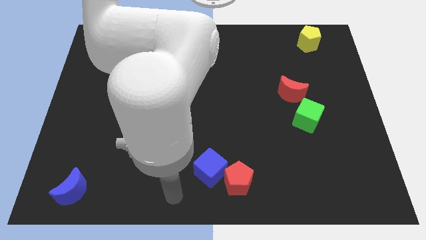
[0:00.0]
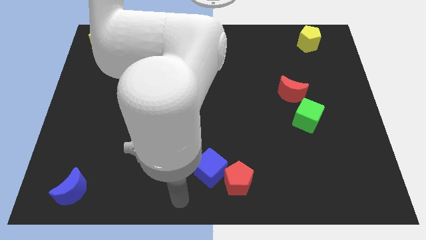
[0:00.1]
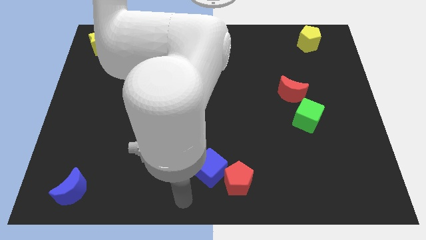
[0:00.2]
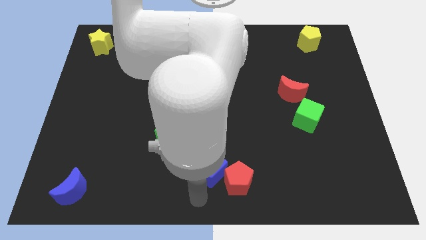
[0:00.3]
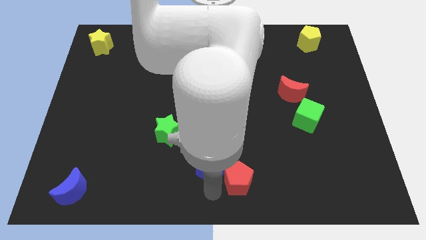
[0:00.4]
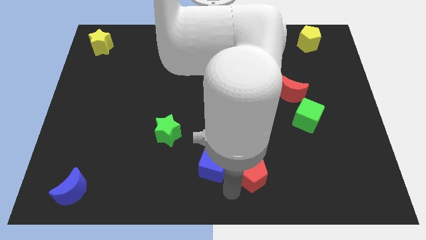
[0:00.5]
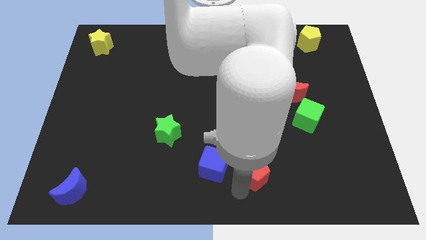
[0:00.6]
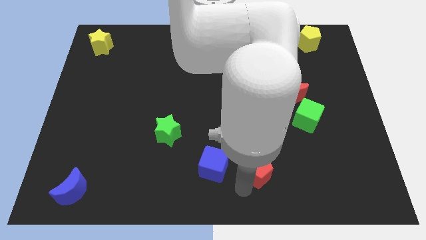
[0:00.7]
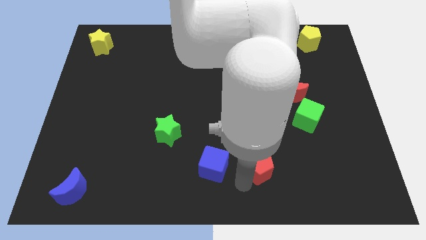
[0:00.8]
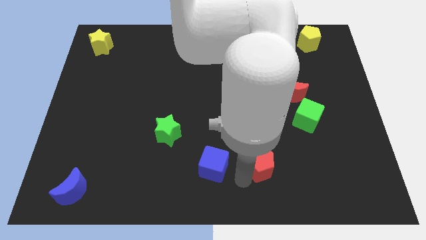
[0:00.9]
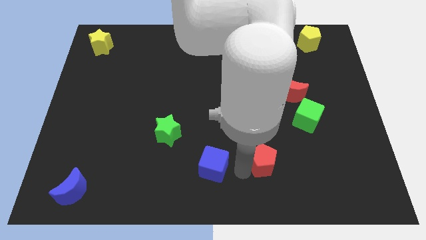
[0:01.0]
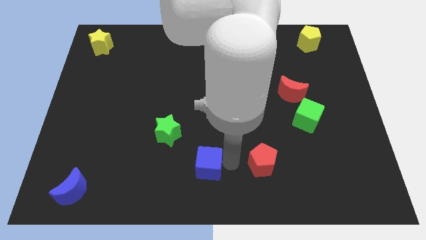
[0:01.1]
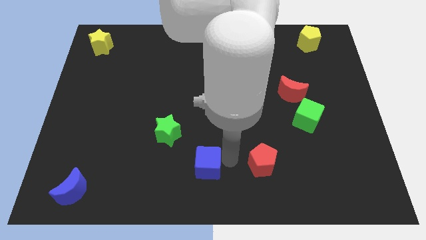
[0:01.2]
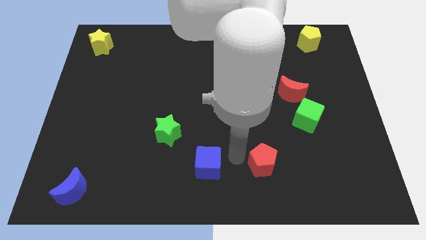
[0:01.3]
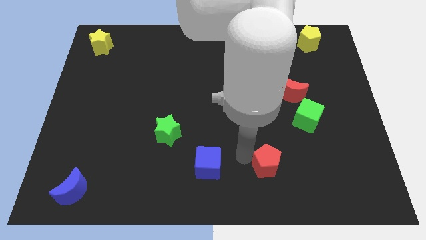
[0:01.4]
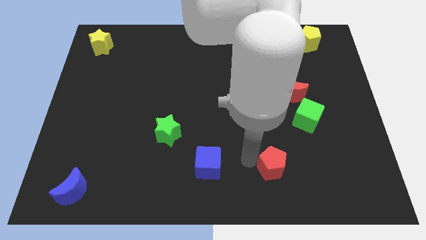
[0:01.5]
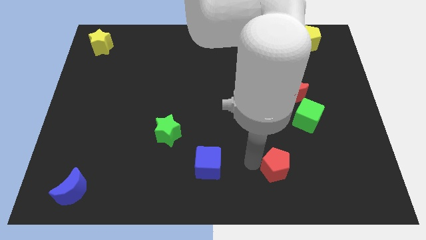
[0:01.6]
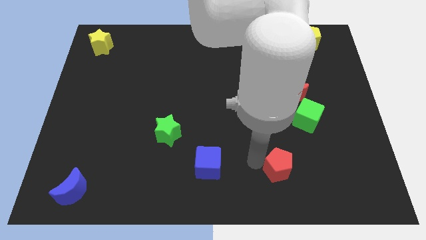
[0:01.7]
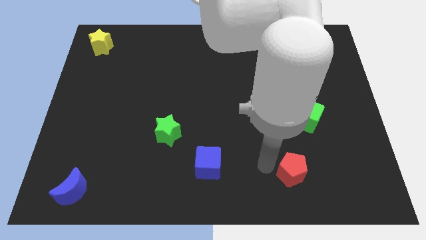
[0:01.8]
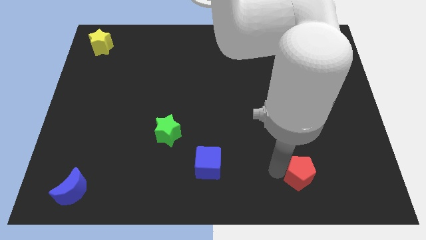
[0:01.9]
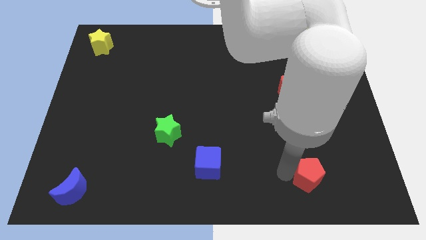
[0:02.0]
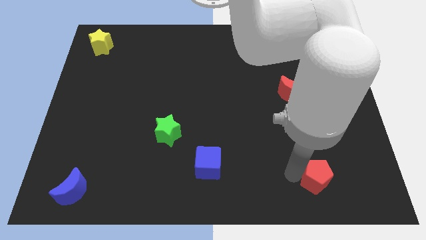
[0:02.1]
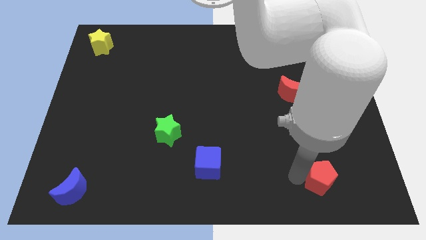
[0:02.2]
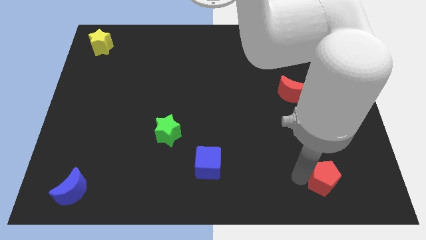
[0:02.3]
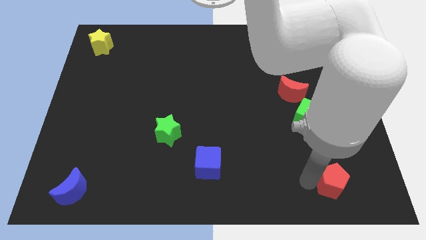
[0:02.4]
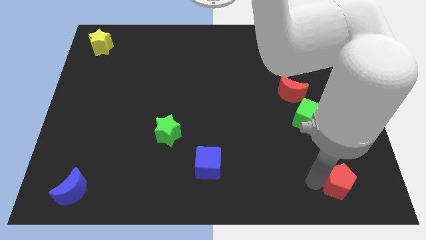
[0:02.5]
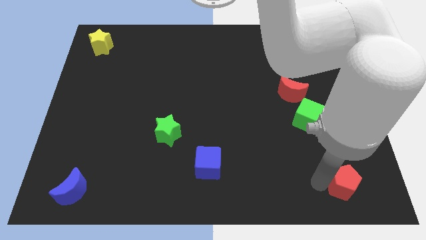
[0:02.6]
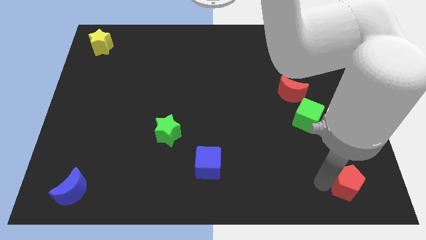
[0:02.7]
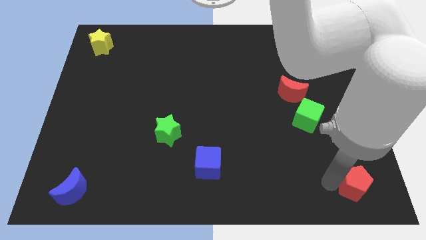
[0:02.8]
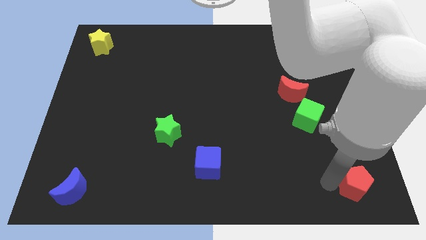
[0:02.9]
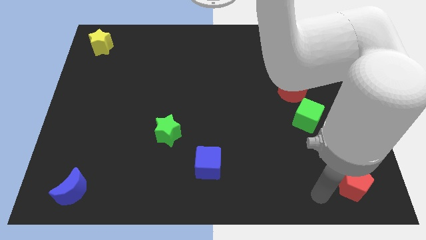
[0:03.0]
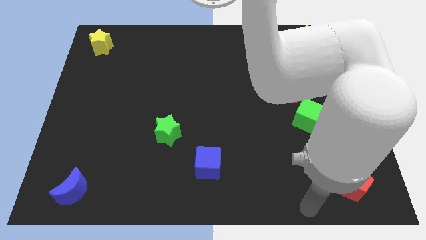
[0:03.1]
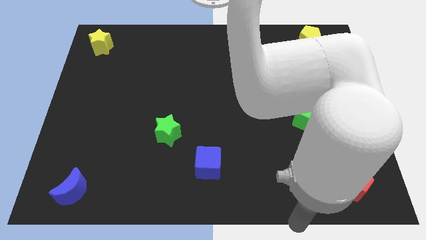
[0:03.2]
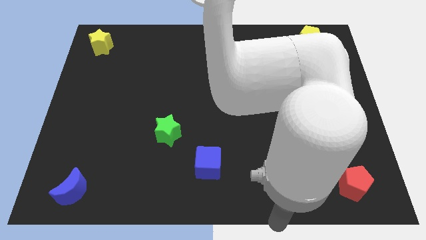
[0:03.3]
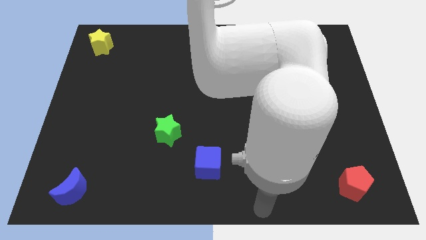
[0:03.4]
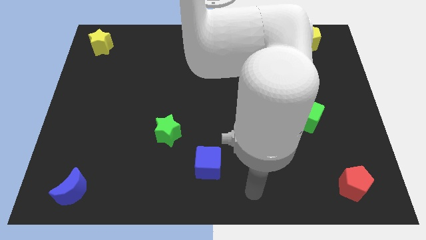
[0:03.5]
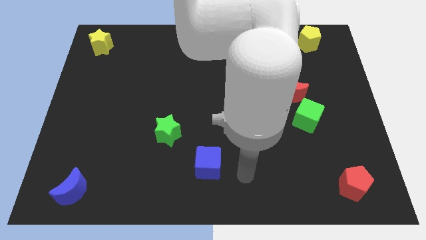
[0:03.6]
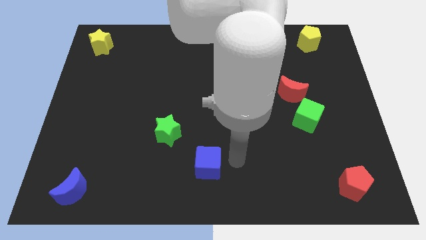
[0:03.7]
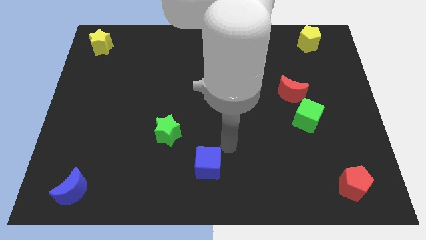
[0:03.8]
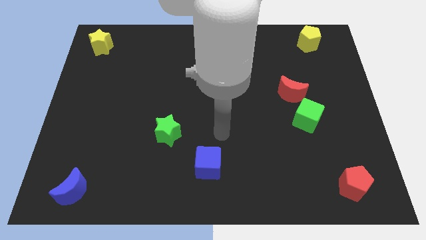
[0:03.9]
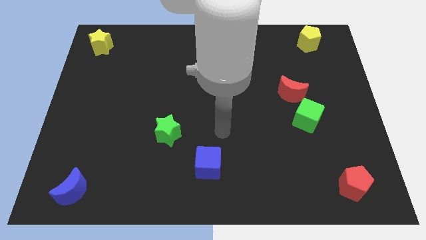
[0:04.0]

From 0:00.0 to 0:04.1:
push the red pentagon away from the blue cube

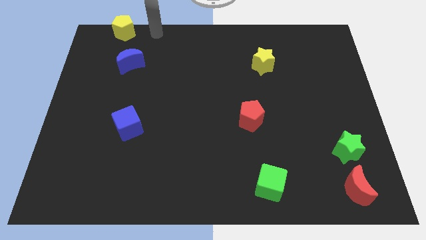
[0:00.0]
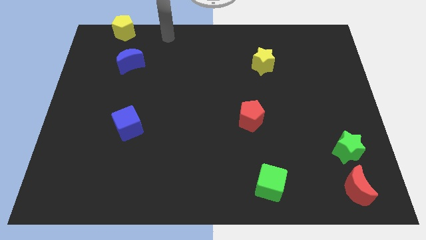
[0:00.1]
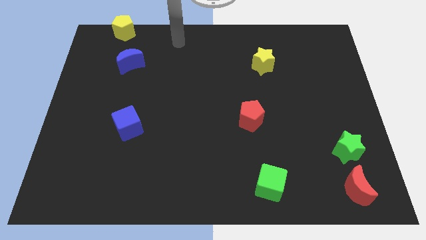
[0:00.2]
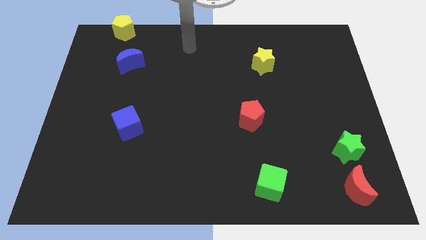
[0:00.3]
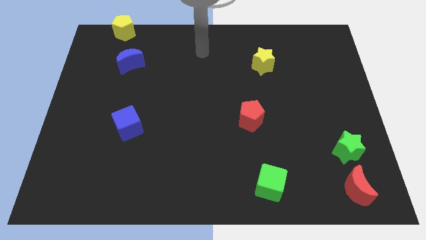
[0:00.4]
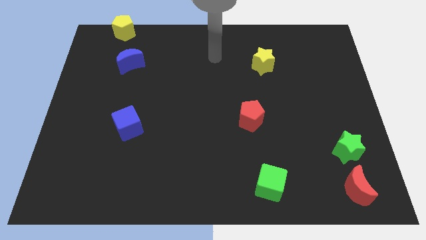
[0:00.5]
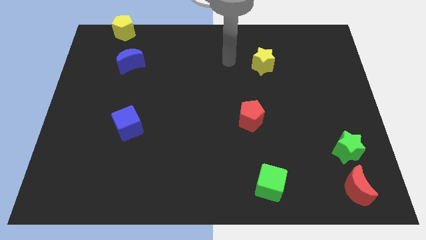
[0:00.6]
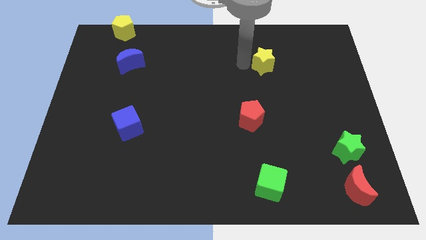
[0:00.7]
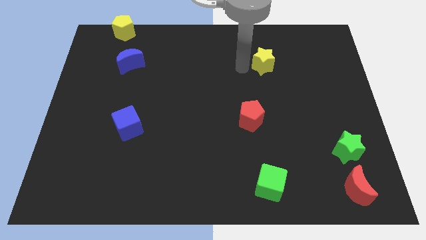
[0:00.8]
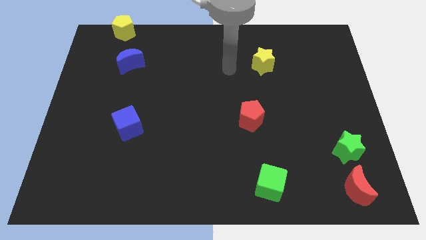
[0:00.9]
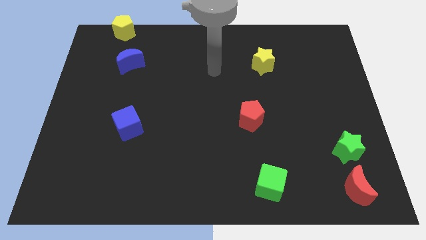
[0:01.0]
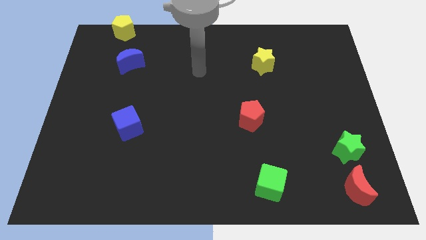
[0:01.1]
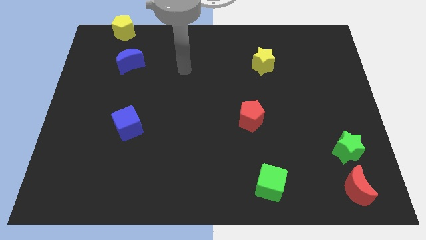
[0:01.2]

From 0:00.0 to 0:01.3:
place arm in between yellow star and blue crescent

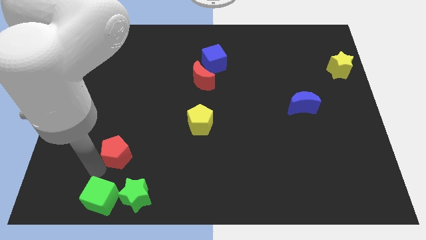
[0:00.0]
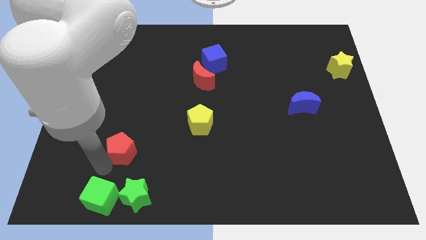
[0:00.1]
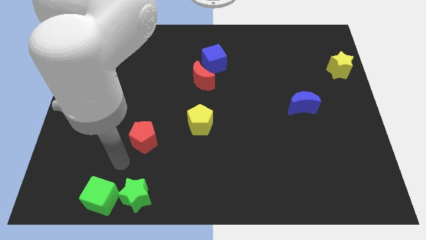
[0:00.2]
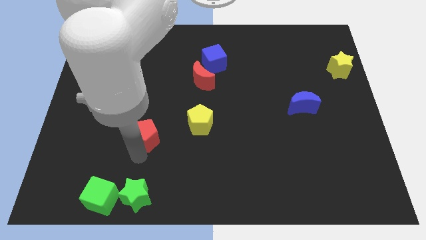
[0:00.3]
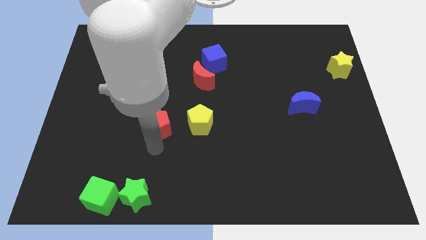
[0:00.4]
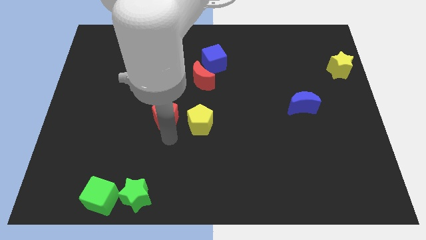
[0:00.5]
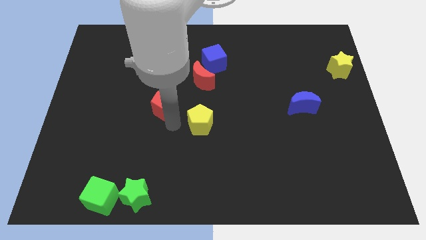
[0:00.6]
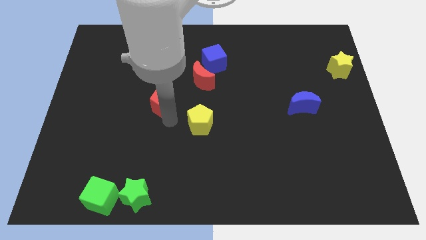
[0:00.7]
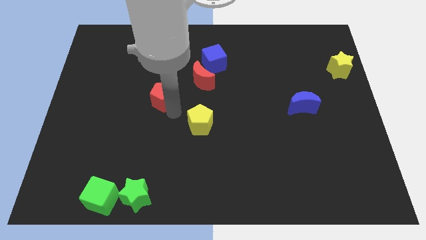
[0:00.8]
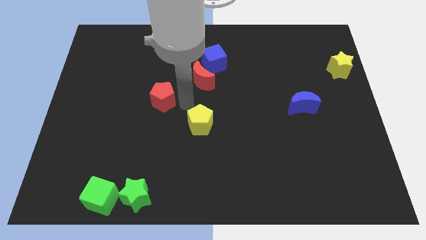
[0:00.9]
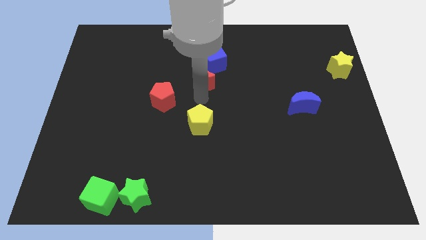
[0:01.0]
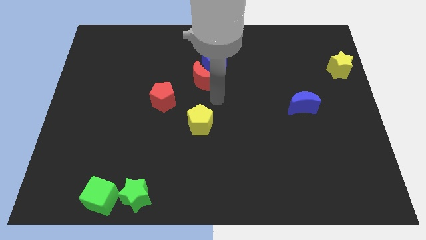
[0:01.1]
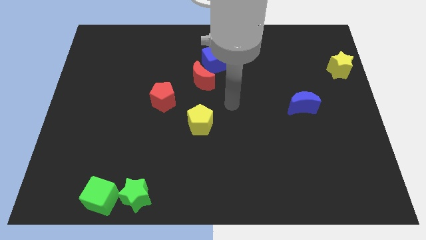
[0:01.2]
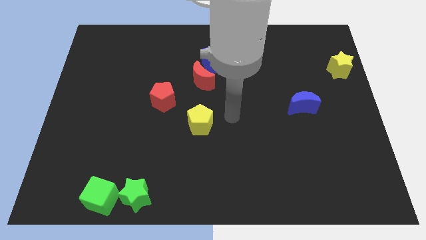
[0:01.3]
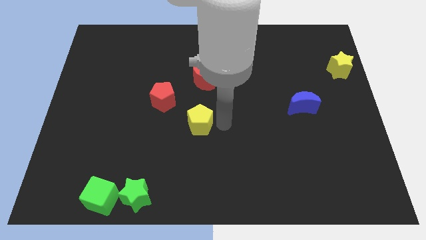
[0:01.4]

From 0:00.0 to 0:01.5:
push the red pentagon diagonal to the yellow pentagon

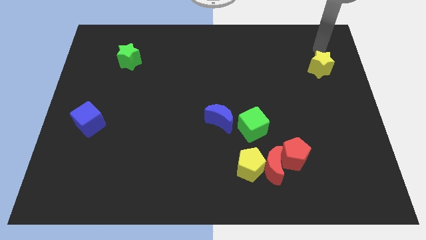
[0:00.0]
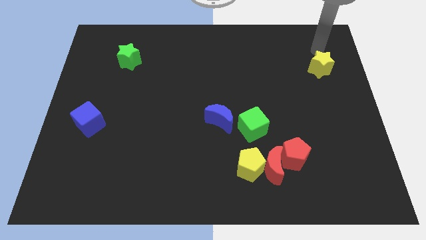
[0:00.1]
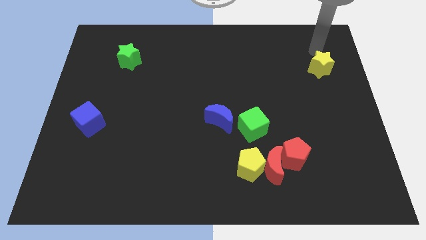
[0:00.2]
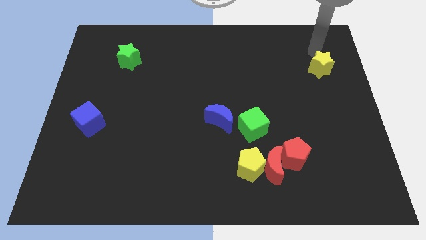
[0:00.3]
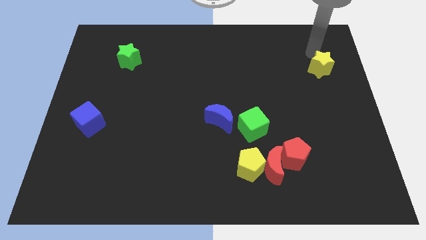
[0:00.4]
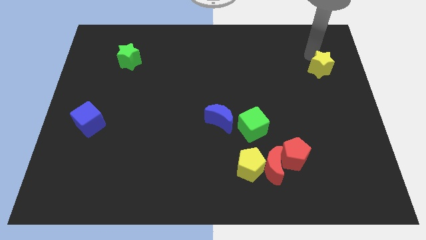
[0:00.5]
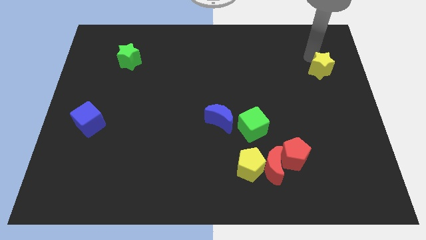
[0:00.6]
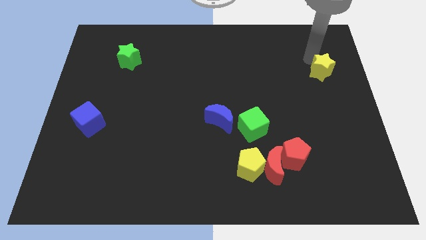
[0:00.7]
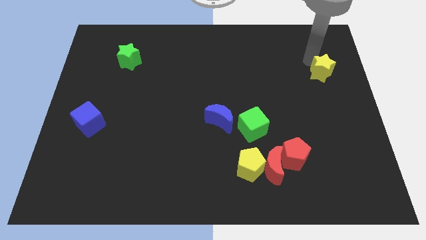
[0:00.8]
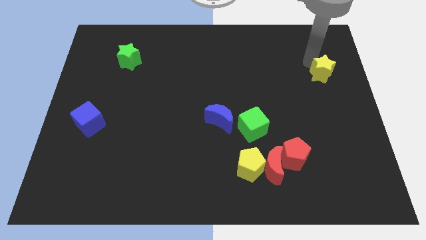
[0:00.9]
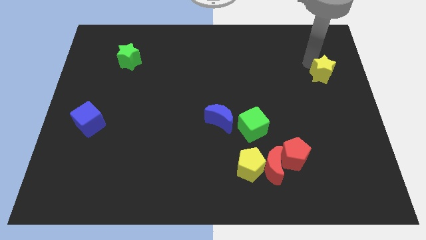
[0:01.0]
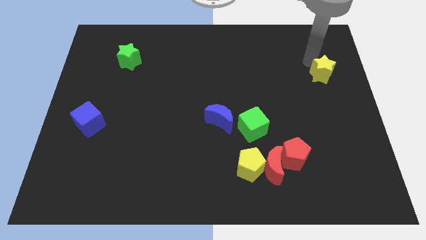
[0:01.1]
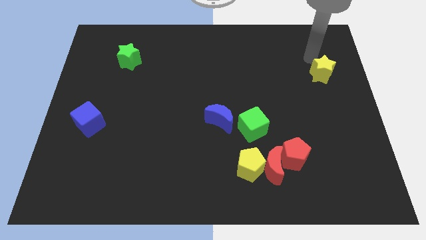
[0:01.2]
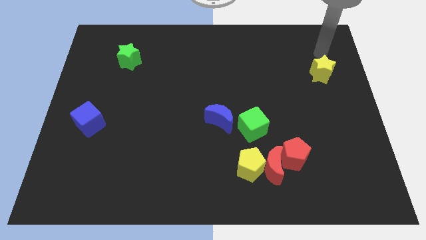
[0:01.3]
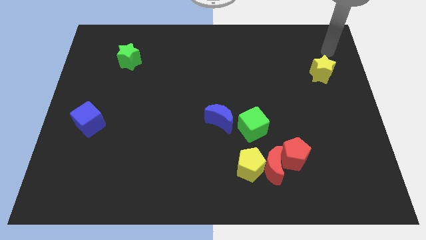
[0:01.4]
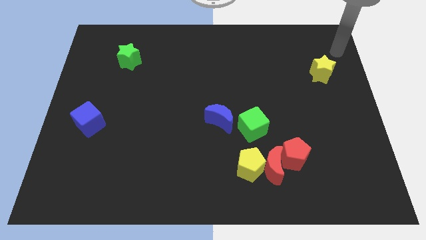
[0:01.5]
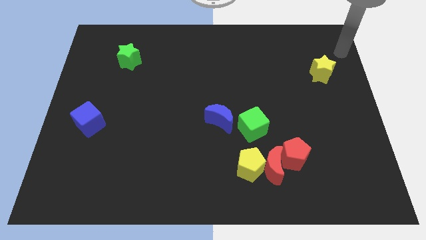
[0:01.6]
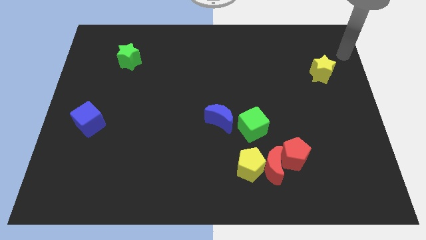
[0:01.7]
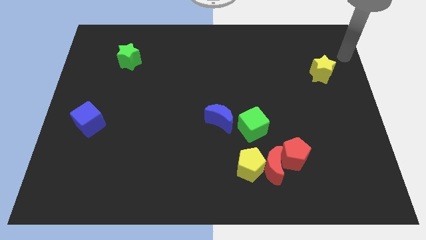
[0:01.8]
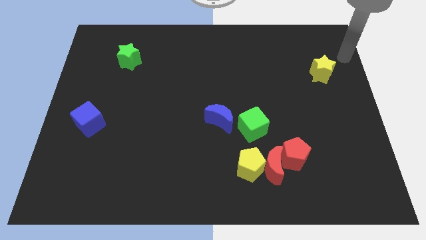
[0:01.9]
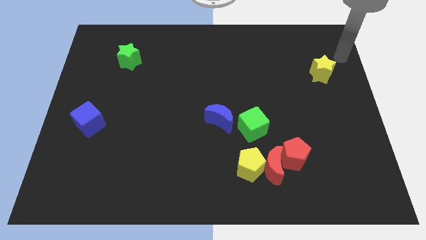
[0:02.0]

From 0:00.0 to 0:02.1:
slightly move the yellow star to the bottom

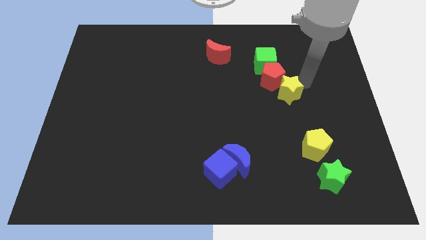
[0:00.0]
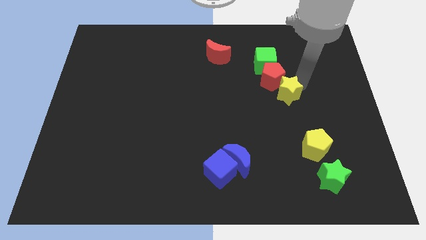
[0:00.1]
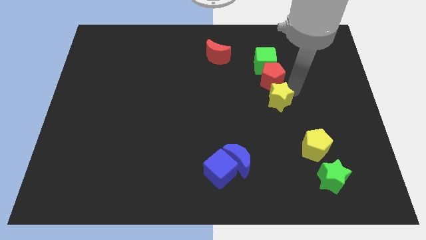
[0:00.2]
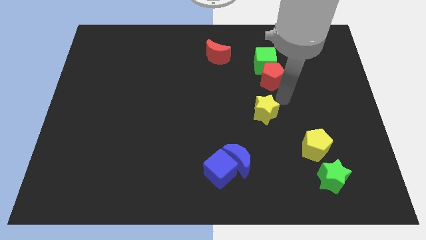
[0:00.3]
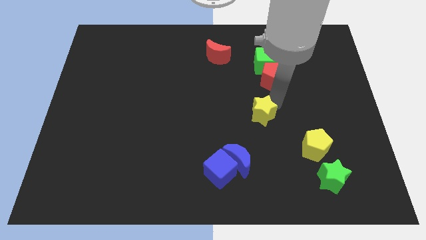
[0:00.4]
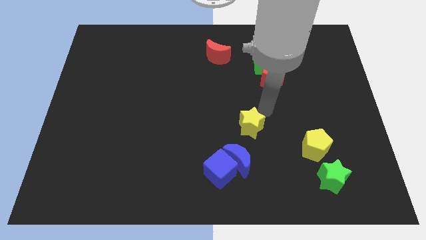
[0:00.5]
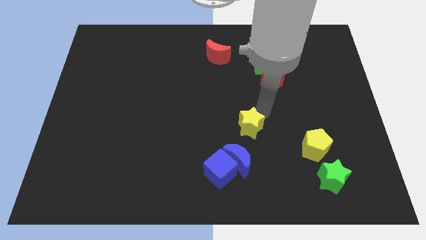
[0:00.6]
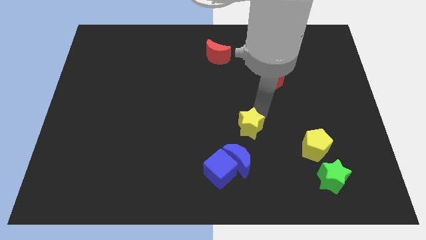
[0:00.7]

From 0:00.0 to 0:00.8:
separate the yellow star from the red pentagon
